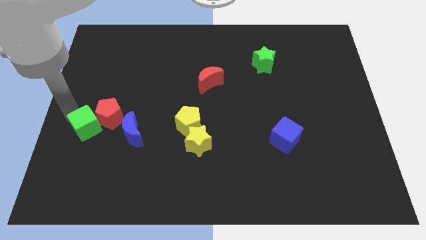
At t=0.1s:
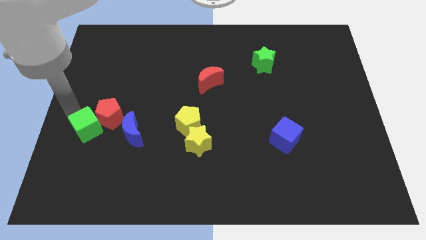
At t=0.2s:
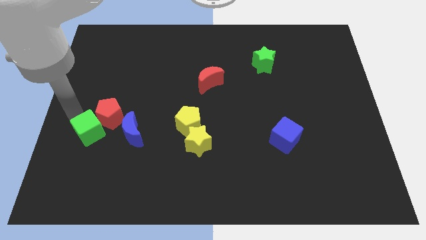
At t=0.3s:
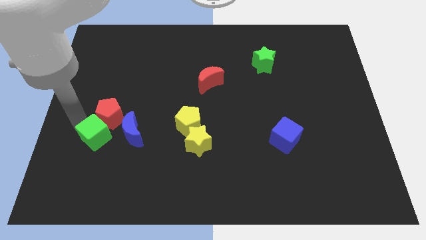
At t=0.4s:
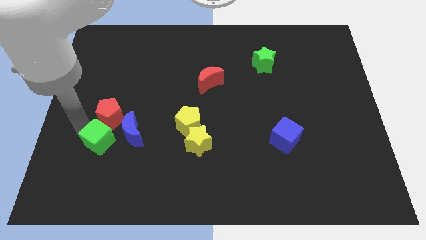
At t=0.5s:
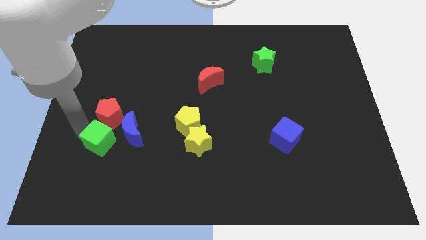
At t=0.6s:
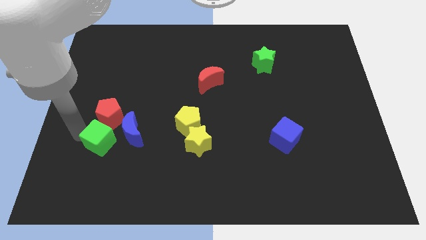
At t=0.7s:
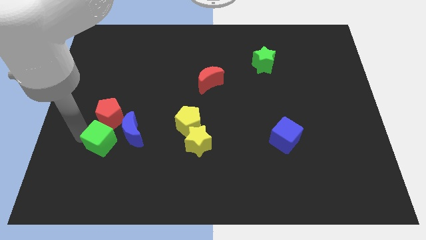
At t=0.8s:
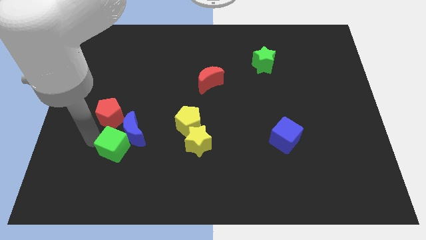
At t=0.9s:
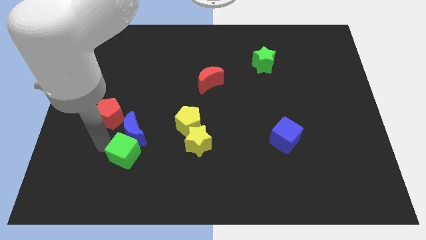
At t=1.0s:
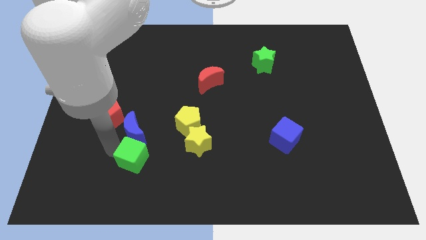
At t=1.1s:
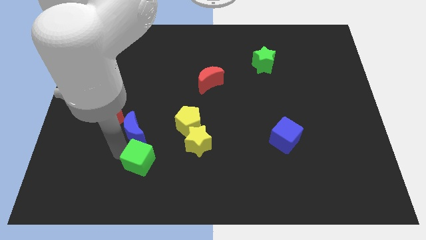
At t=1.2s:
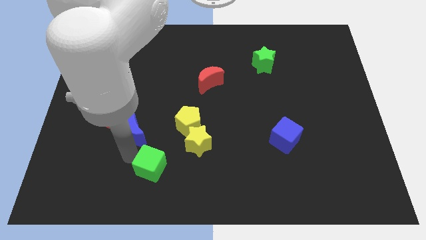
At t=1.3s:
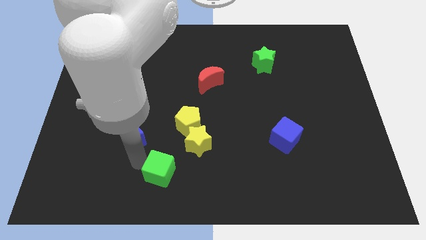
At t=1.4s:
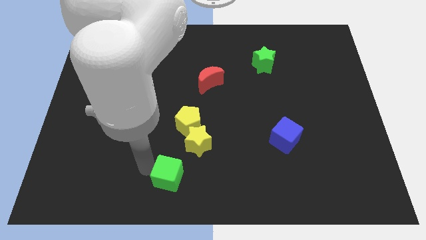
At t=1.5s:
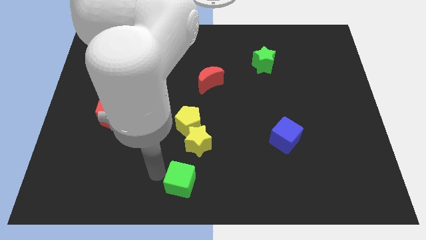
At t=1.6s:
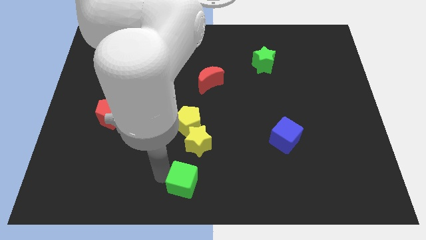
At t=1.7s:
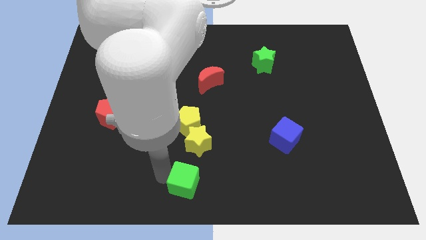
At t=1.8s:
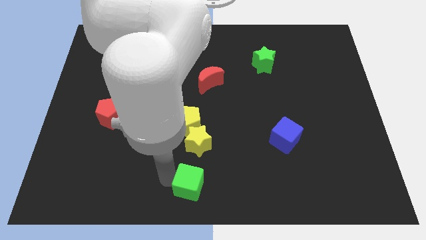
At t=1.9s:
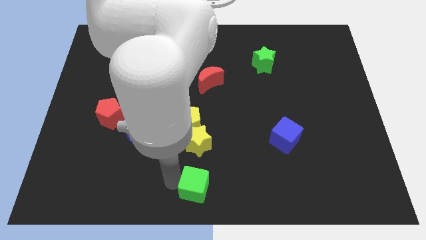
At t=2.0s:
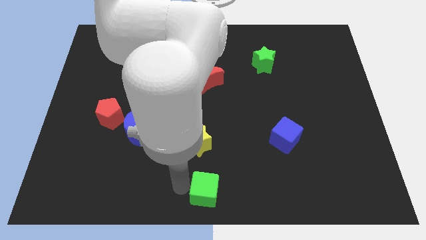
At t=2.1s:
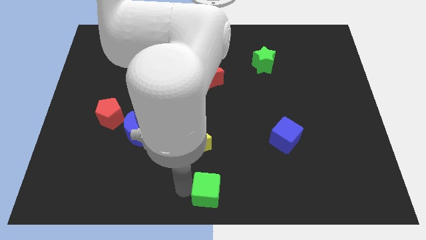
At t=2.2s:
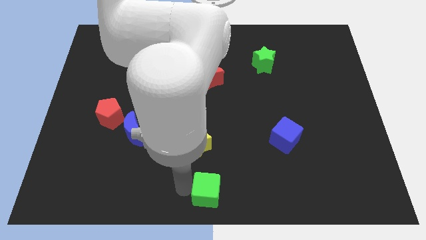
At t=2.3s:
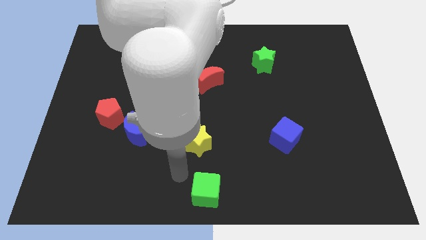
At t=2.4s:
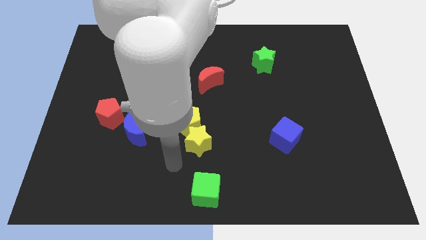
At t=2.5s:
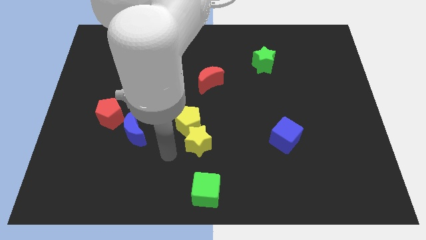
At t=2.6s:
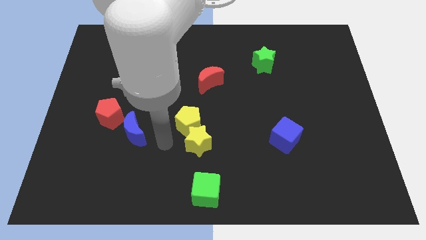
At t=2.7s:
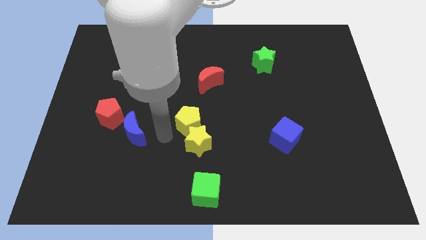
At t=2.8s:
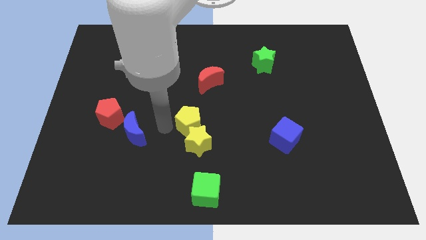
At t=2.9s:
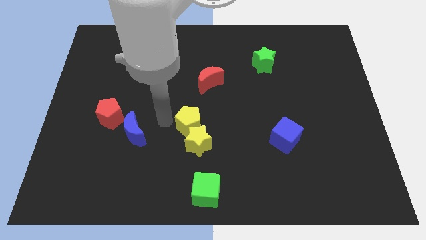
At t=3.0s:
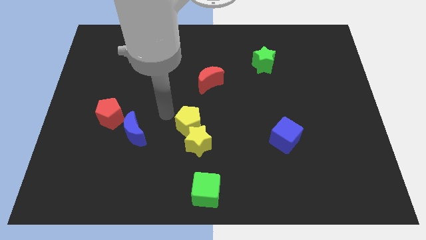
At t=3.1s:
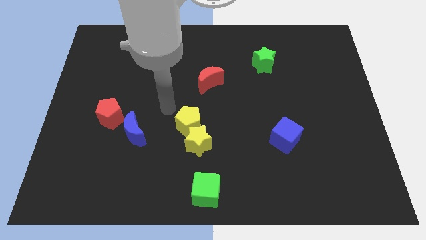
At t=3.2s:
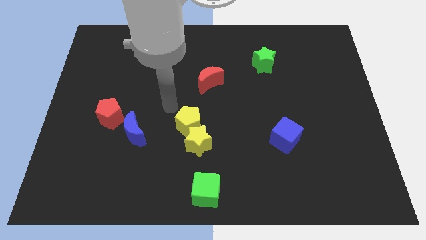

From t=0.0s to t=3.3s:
place green cube to the bottom center of the board

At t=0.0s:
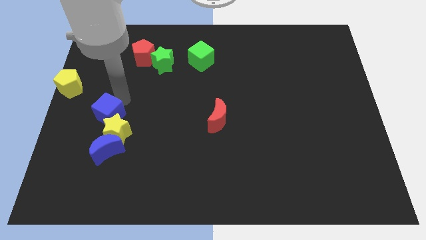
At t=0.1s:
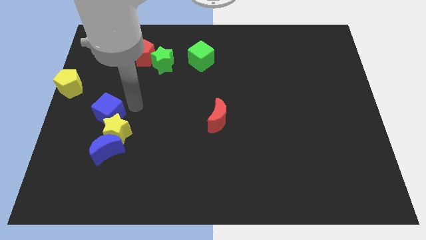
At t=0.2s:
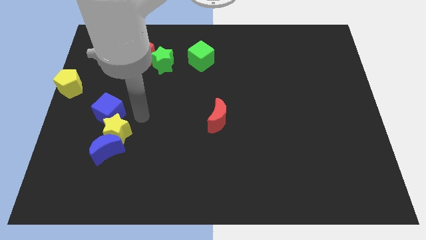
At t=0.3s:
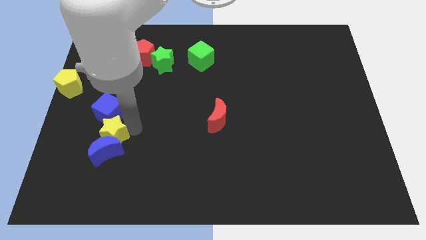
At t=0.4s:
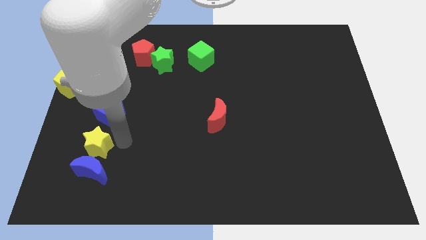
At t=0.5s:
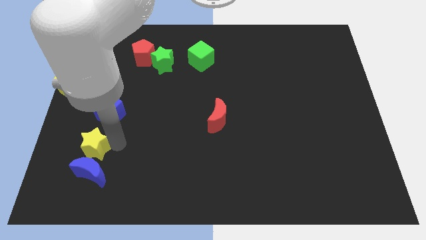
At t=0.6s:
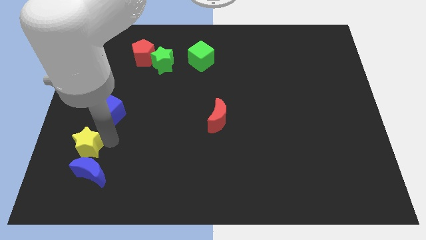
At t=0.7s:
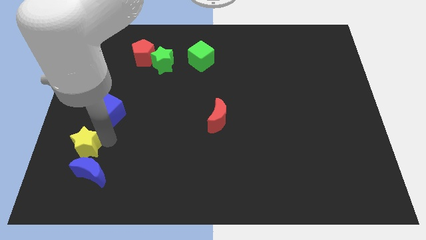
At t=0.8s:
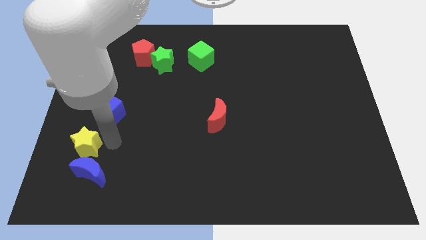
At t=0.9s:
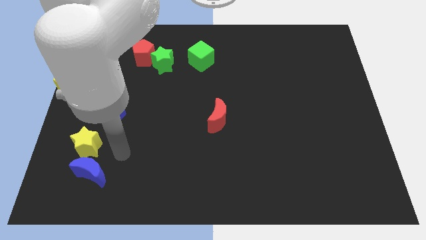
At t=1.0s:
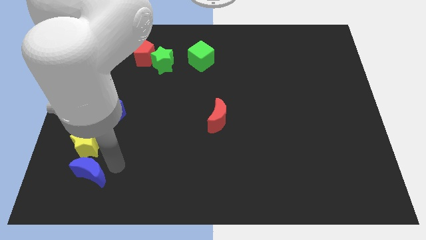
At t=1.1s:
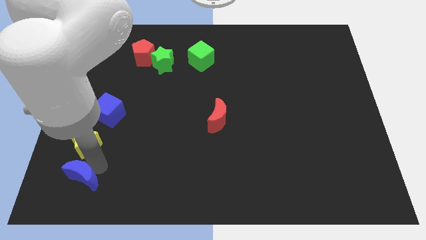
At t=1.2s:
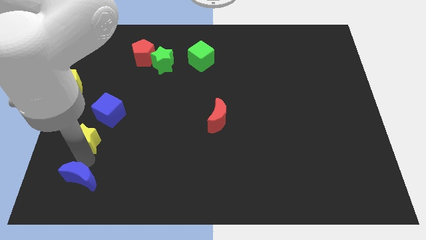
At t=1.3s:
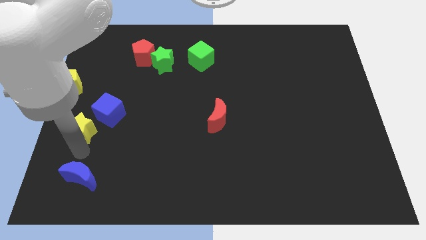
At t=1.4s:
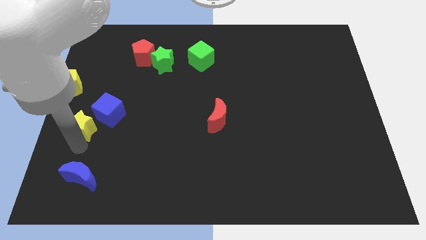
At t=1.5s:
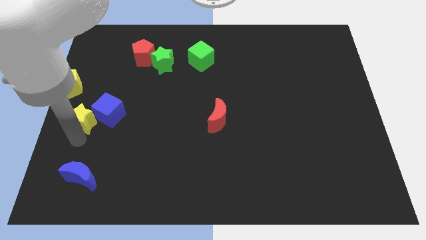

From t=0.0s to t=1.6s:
separate the yellow star from the blue crescent

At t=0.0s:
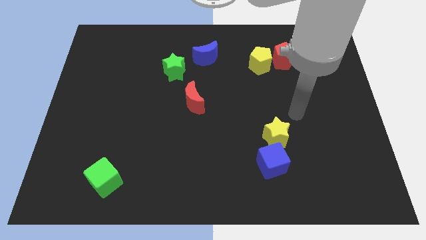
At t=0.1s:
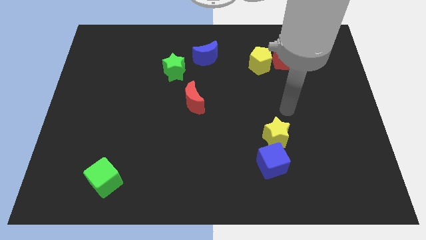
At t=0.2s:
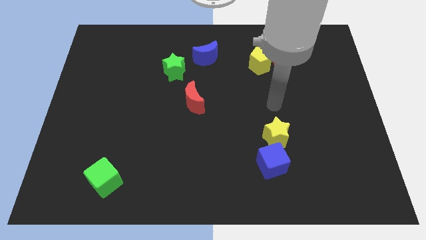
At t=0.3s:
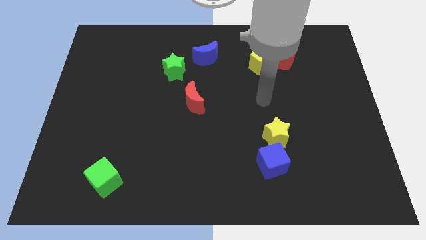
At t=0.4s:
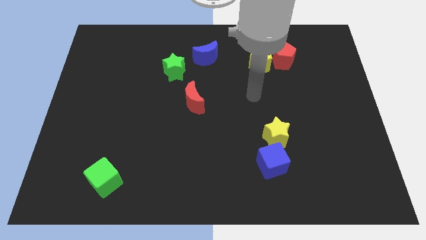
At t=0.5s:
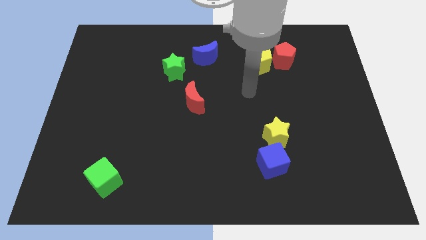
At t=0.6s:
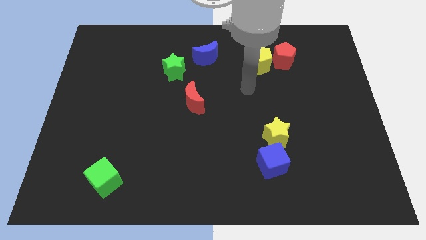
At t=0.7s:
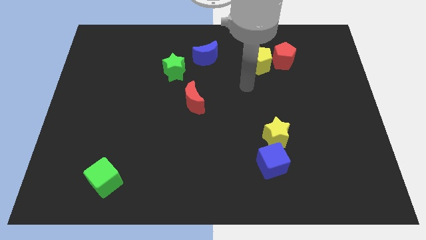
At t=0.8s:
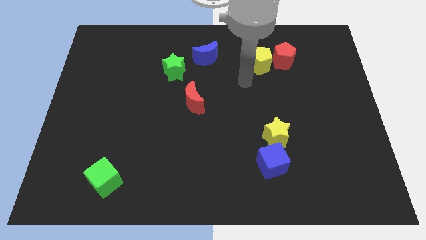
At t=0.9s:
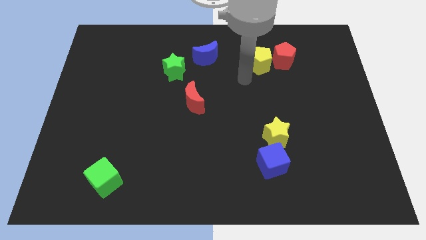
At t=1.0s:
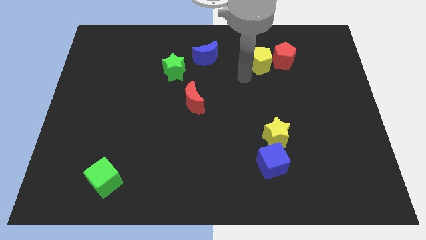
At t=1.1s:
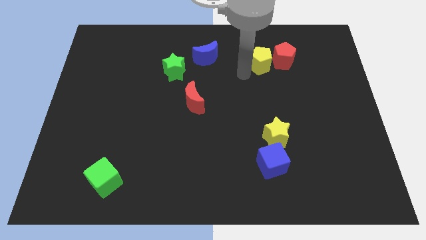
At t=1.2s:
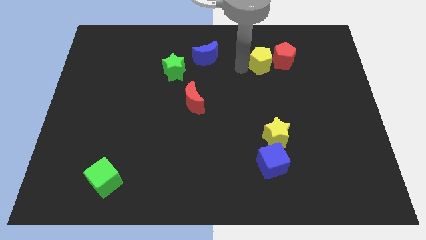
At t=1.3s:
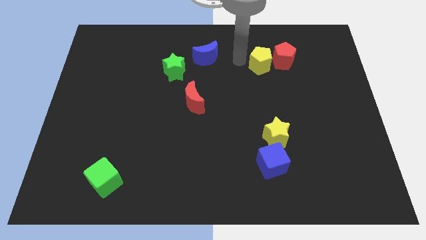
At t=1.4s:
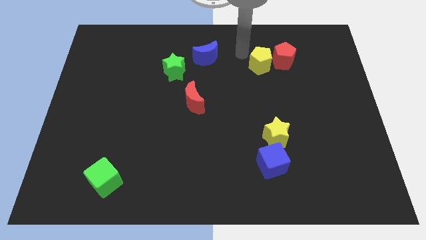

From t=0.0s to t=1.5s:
point your arm at the left of the yellow pentagon

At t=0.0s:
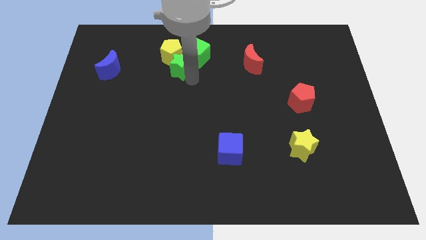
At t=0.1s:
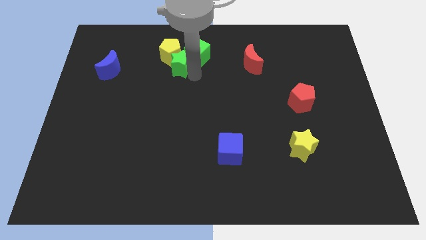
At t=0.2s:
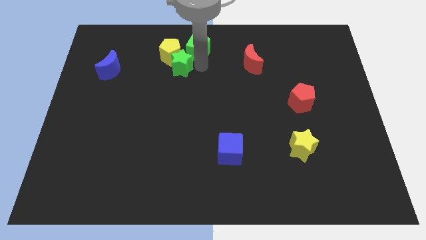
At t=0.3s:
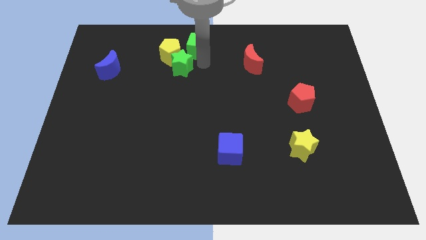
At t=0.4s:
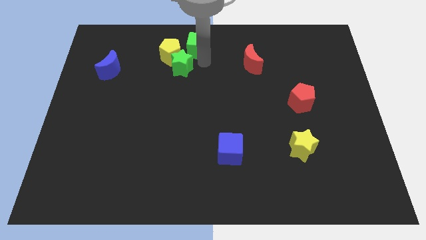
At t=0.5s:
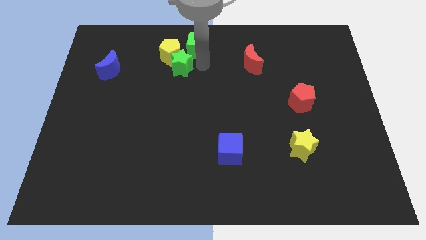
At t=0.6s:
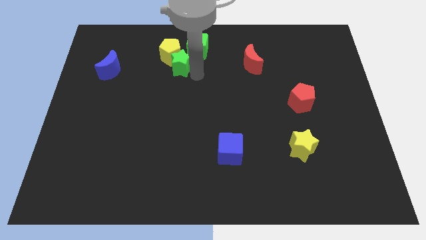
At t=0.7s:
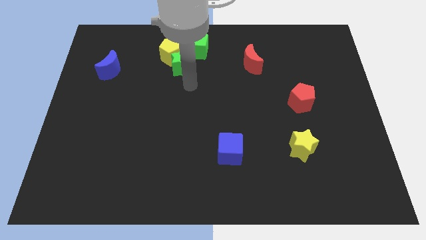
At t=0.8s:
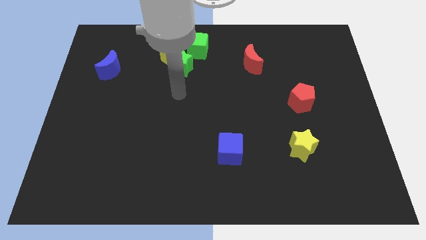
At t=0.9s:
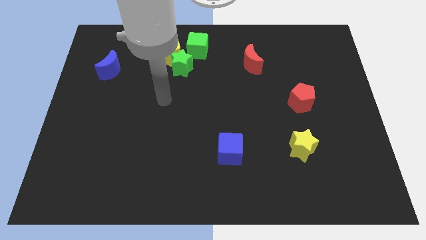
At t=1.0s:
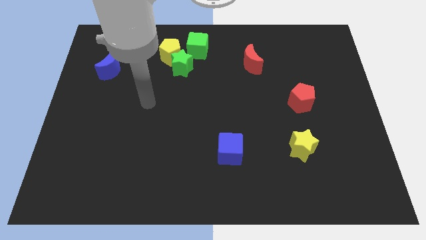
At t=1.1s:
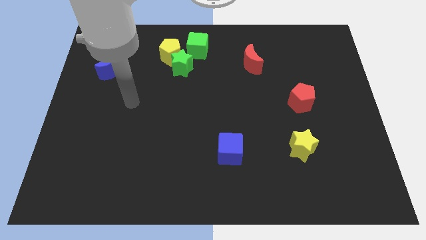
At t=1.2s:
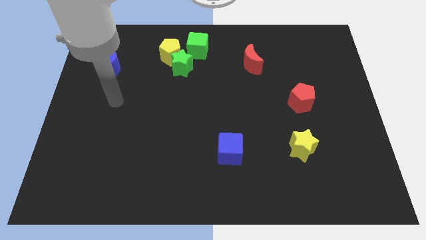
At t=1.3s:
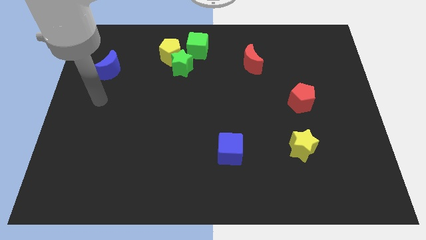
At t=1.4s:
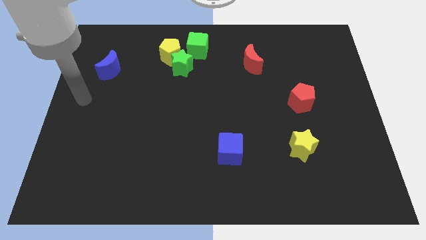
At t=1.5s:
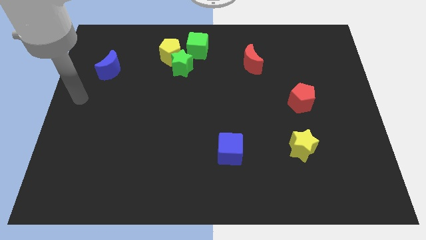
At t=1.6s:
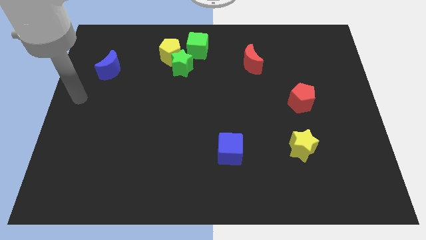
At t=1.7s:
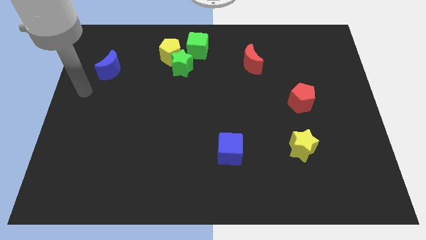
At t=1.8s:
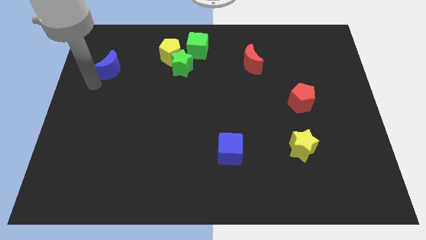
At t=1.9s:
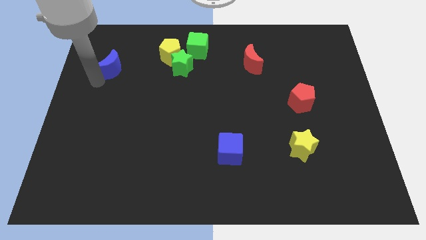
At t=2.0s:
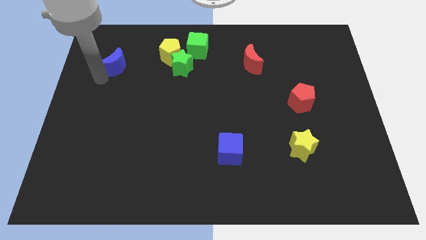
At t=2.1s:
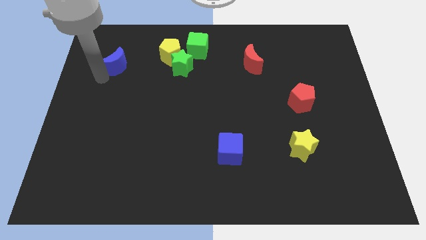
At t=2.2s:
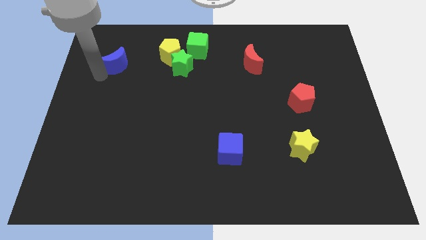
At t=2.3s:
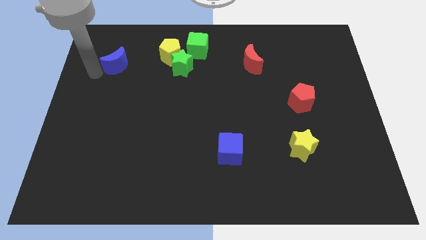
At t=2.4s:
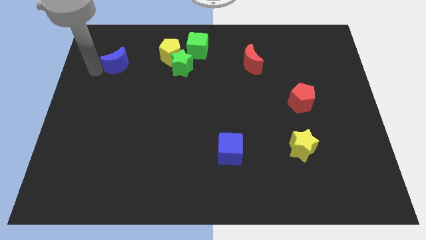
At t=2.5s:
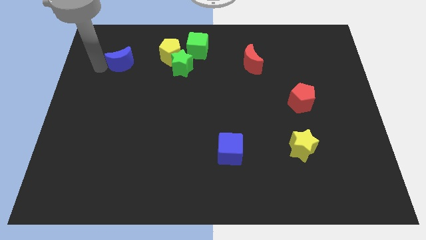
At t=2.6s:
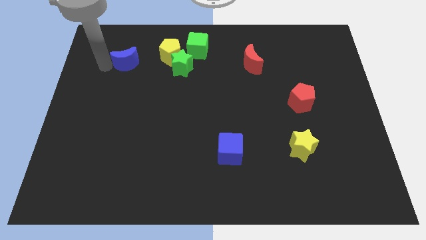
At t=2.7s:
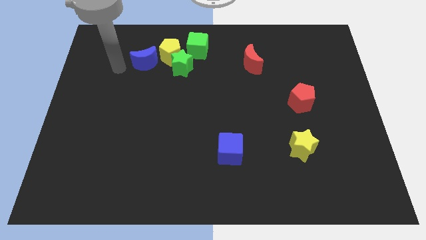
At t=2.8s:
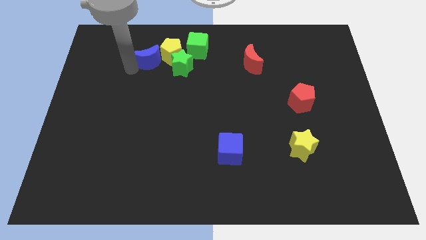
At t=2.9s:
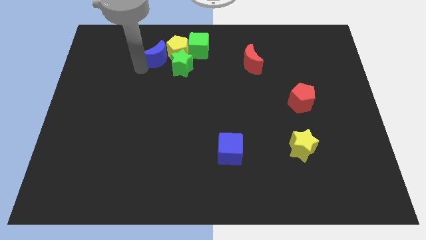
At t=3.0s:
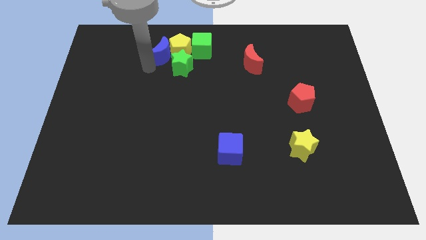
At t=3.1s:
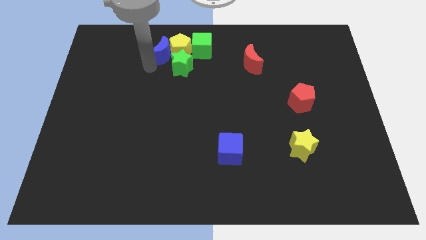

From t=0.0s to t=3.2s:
place the blue crescent to the left of the yellow pentagon
